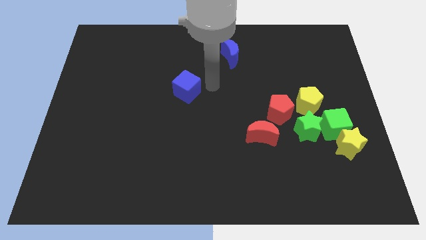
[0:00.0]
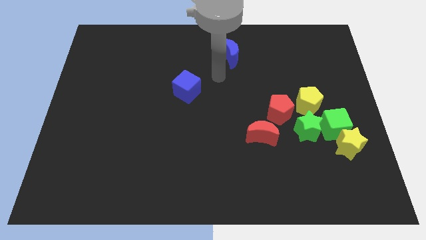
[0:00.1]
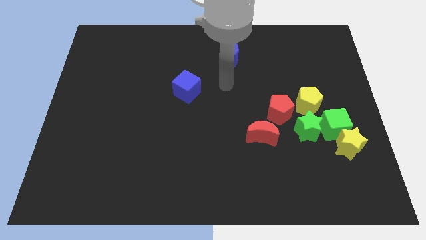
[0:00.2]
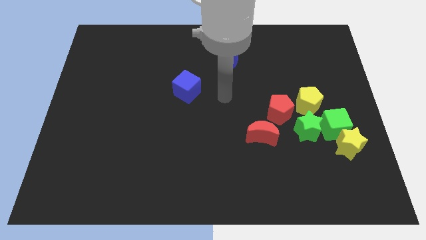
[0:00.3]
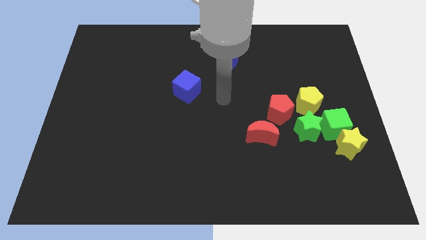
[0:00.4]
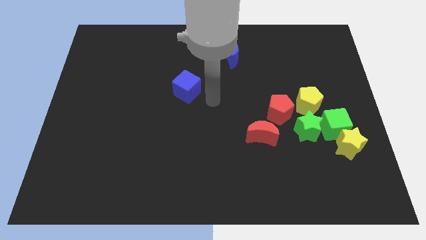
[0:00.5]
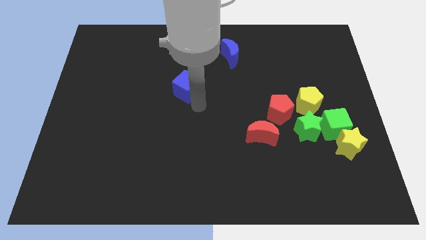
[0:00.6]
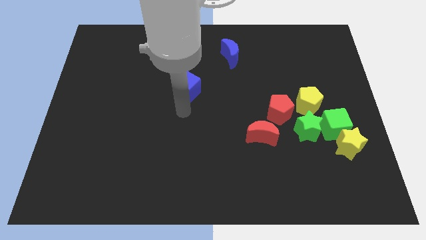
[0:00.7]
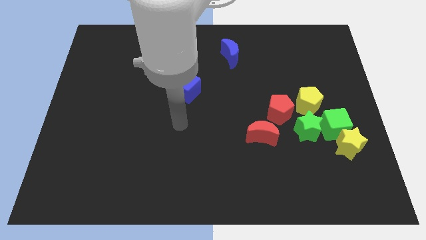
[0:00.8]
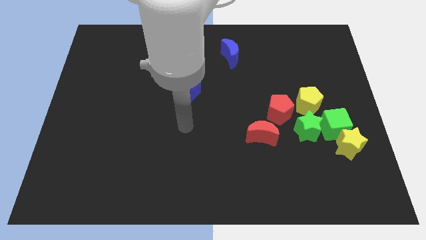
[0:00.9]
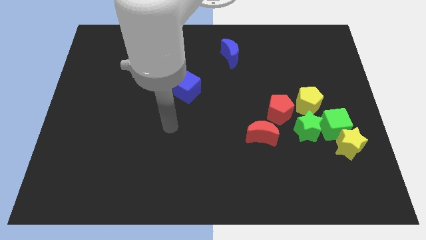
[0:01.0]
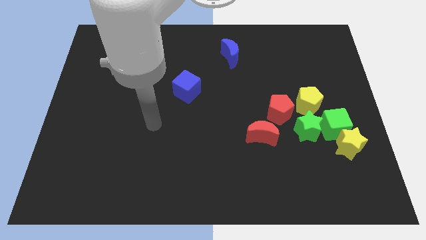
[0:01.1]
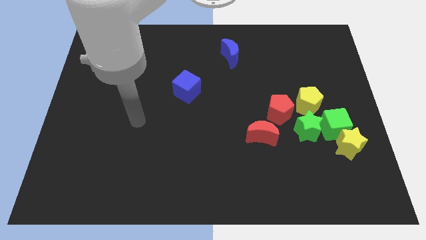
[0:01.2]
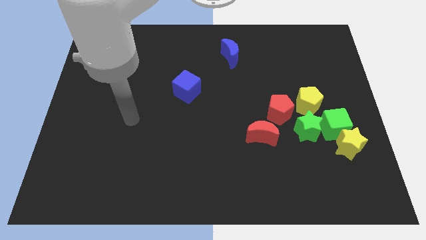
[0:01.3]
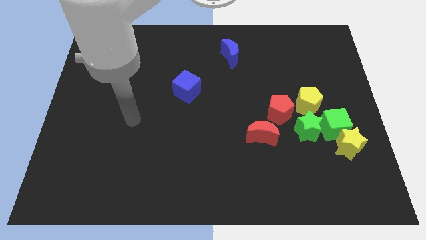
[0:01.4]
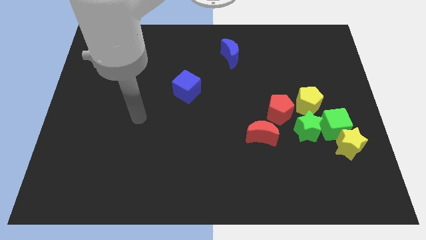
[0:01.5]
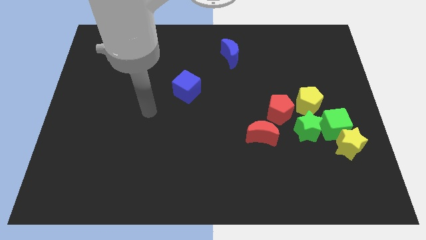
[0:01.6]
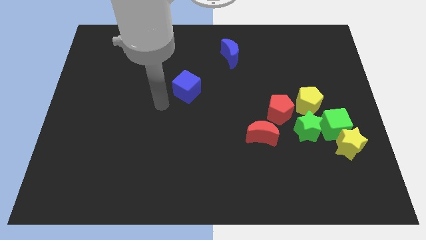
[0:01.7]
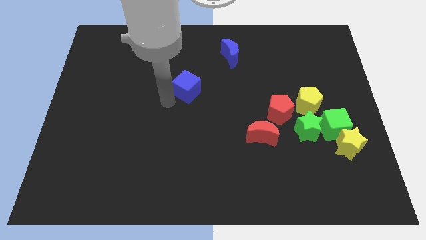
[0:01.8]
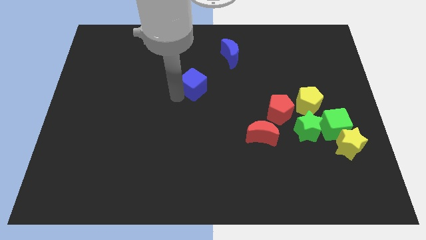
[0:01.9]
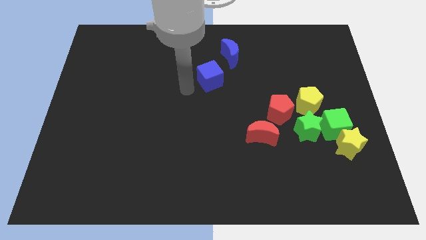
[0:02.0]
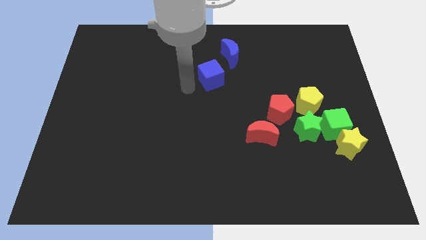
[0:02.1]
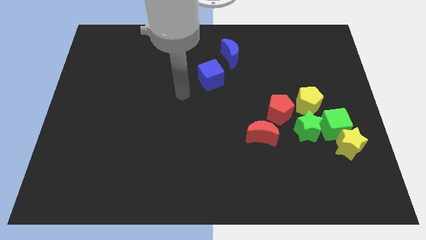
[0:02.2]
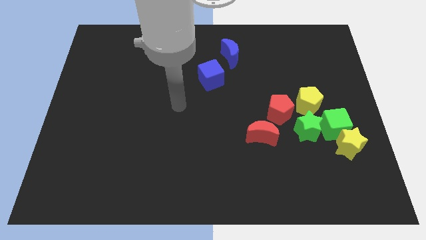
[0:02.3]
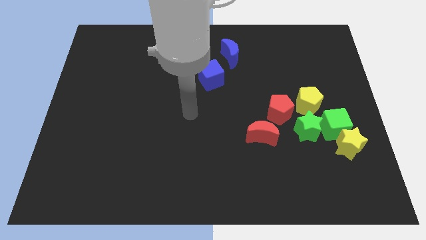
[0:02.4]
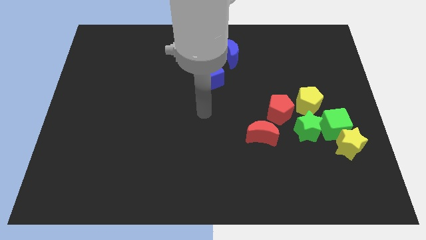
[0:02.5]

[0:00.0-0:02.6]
move the blue cube towards the blue crescent

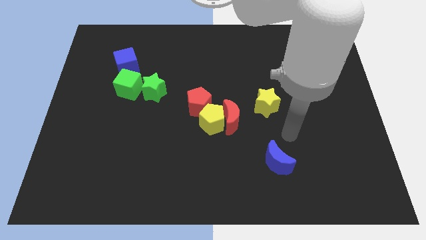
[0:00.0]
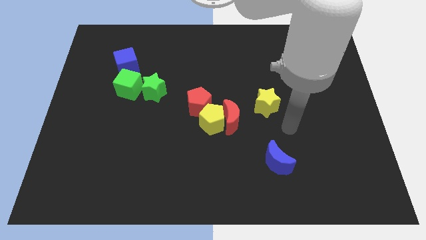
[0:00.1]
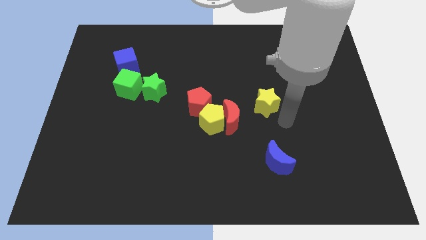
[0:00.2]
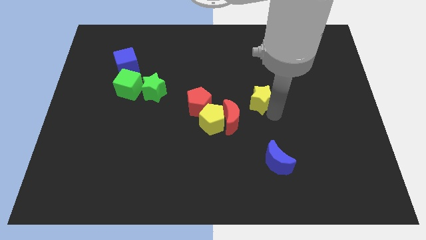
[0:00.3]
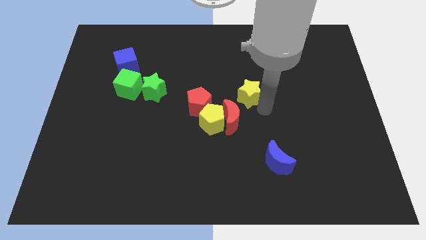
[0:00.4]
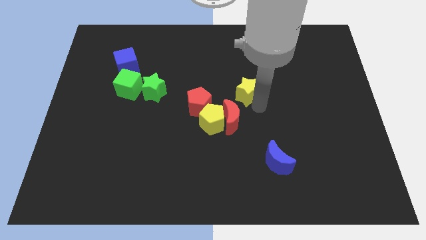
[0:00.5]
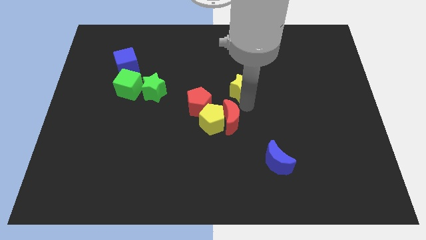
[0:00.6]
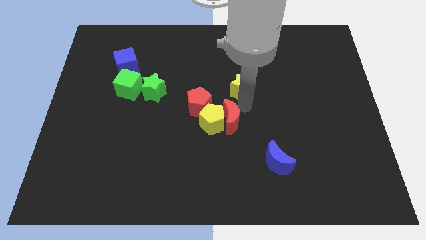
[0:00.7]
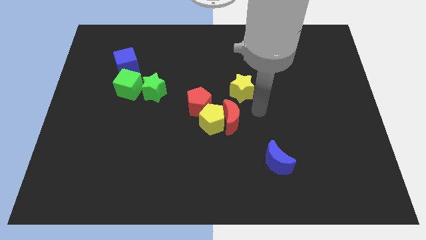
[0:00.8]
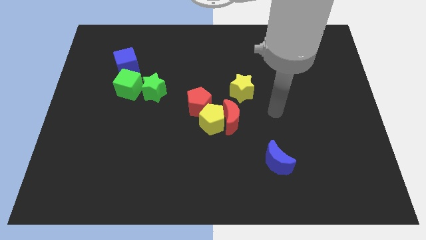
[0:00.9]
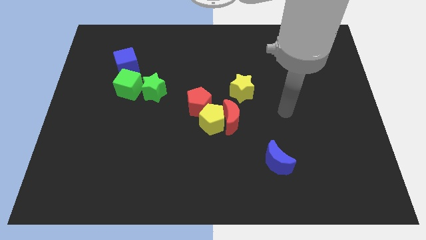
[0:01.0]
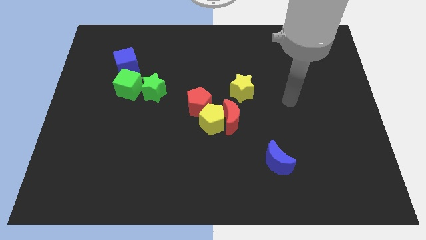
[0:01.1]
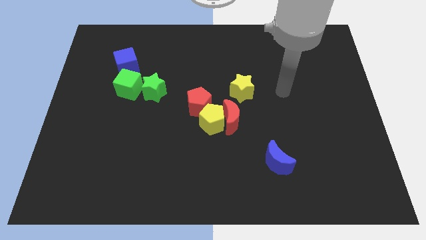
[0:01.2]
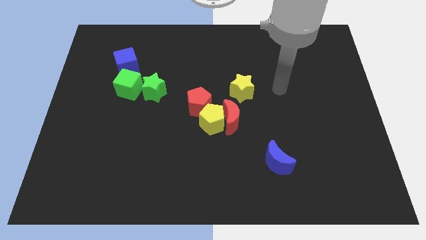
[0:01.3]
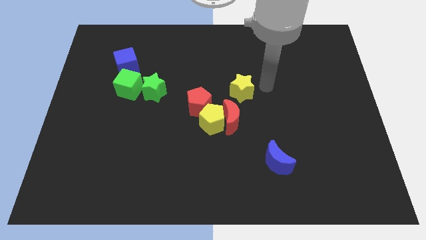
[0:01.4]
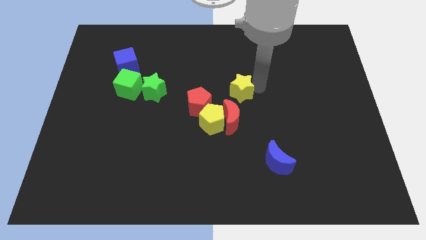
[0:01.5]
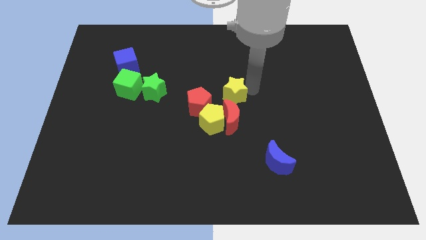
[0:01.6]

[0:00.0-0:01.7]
place the yellow star above the red moon

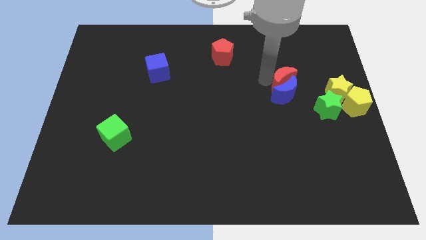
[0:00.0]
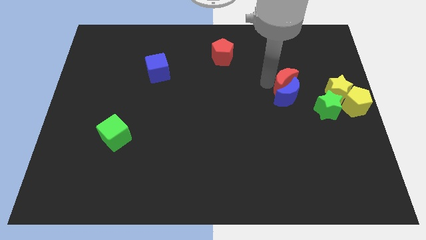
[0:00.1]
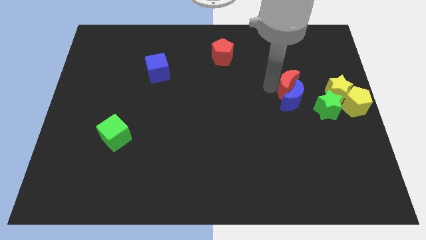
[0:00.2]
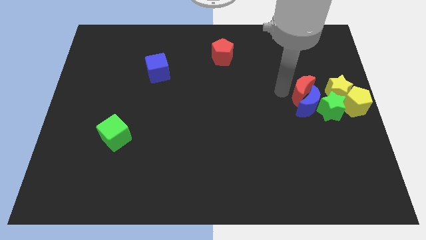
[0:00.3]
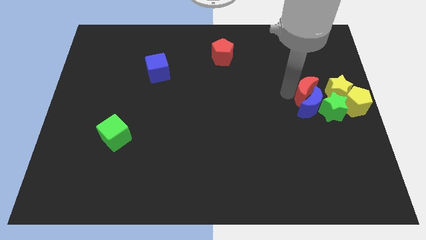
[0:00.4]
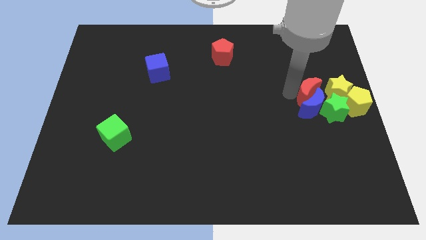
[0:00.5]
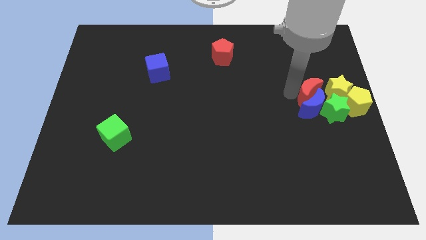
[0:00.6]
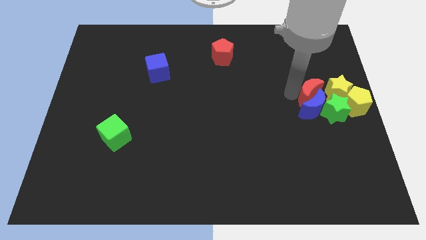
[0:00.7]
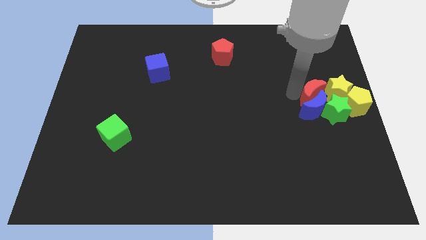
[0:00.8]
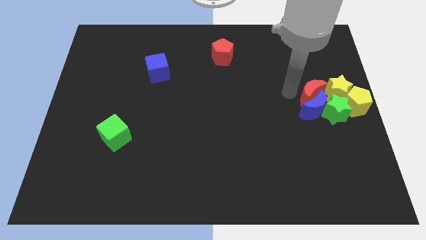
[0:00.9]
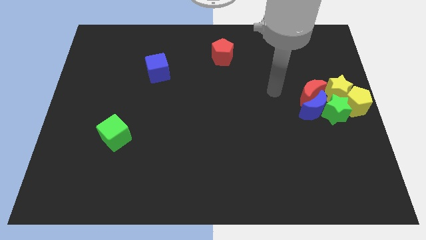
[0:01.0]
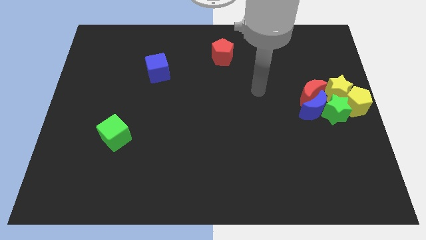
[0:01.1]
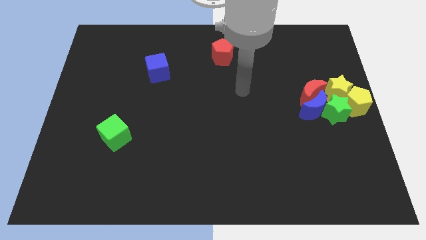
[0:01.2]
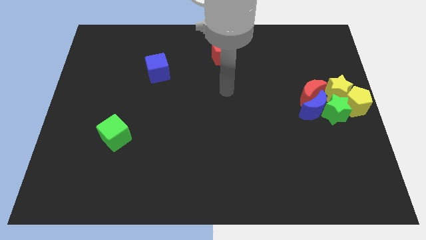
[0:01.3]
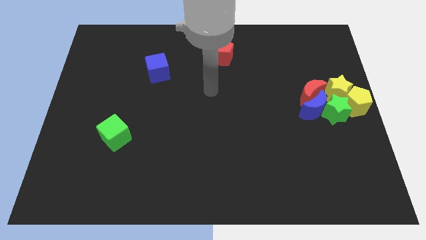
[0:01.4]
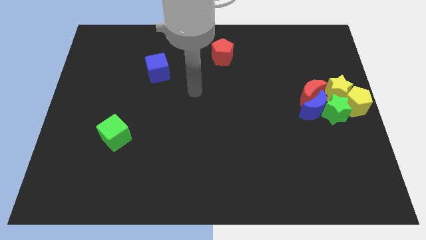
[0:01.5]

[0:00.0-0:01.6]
move the red moon and blue moon into the green star

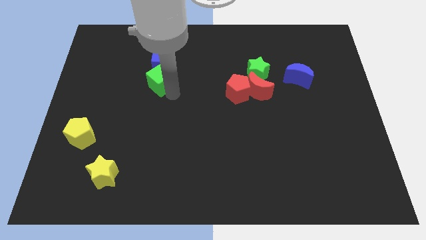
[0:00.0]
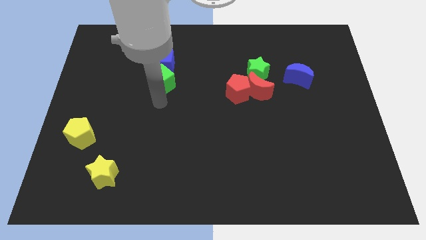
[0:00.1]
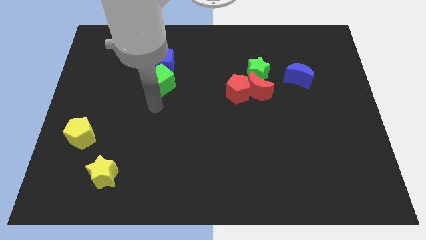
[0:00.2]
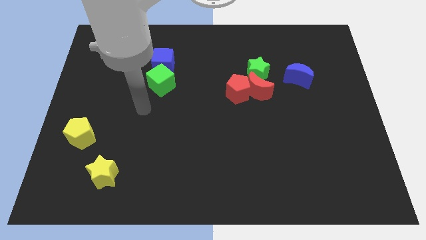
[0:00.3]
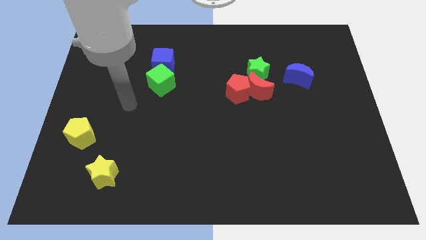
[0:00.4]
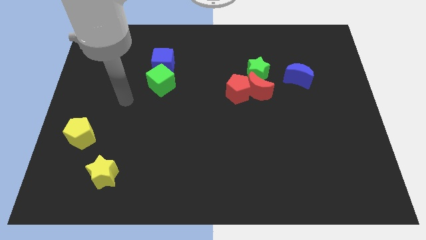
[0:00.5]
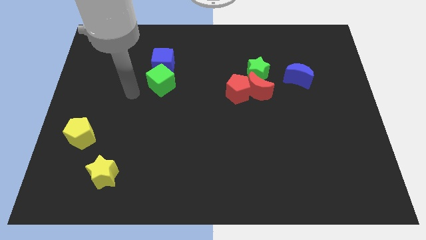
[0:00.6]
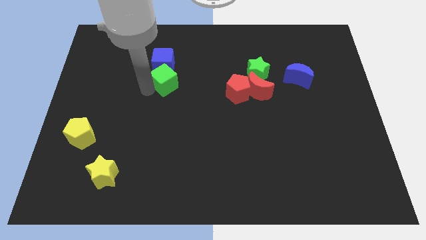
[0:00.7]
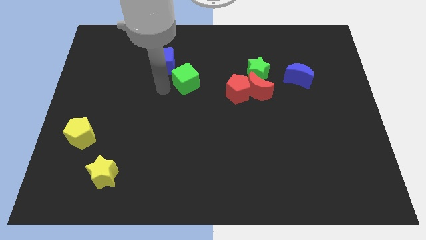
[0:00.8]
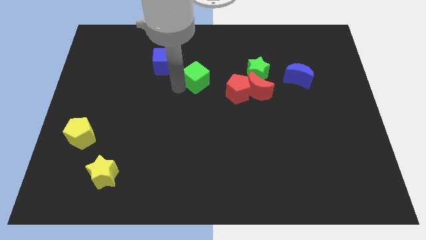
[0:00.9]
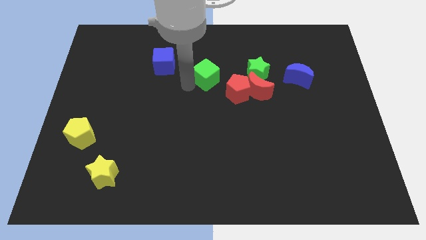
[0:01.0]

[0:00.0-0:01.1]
separate green cube from blue cube

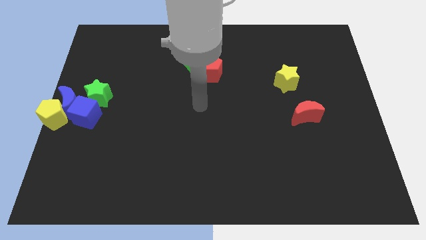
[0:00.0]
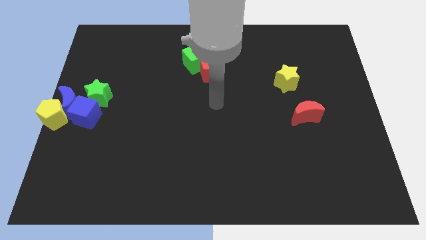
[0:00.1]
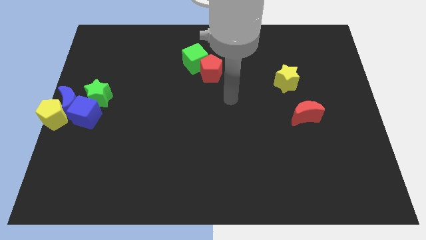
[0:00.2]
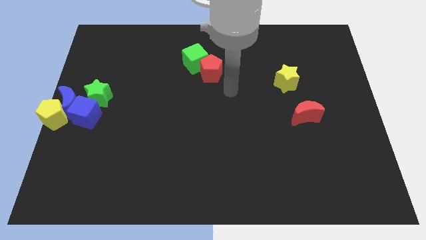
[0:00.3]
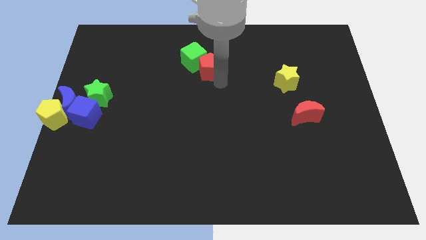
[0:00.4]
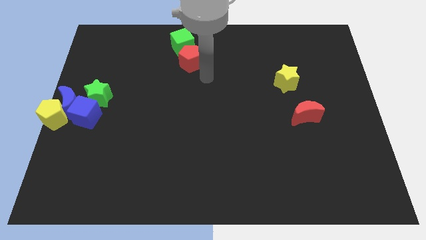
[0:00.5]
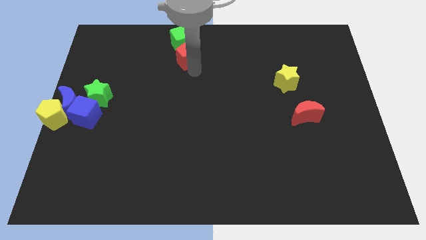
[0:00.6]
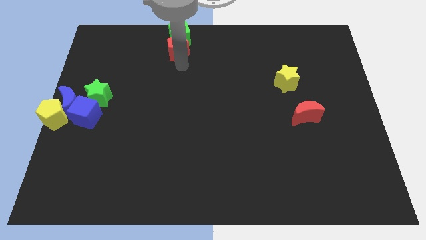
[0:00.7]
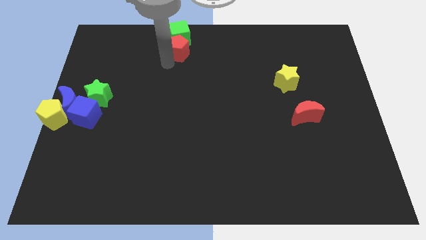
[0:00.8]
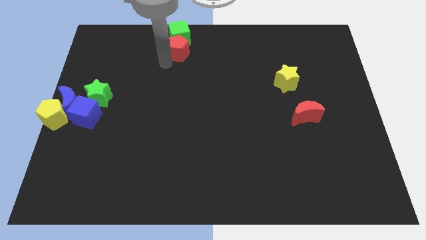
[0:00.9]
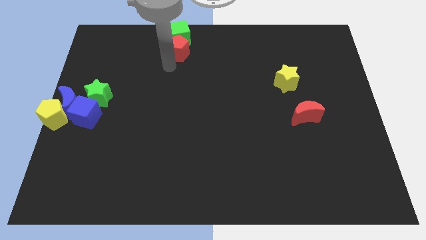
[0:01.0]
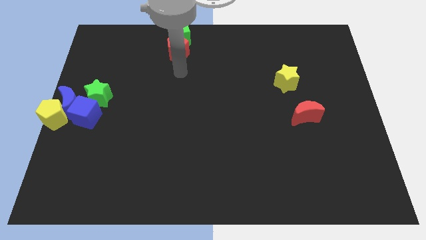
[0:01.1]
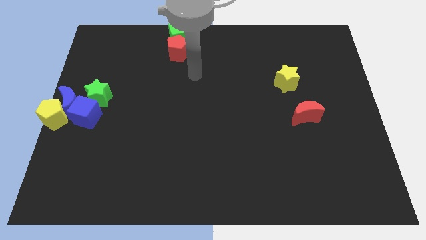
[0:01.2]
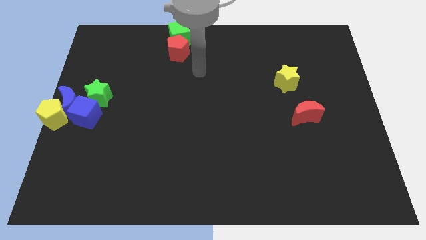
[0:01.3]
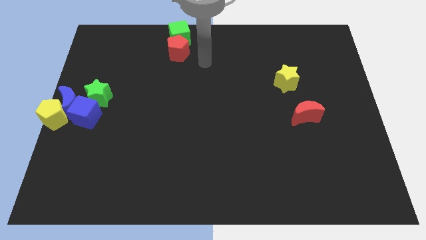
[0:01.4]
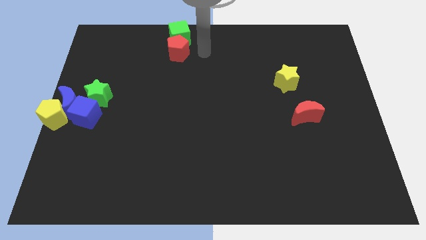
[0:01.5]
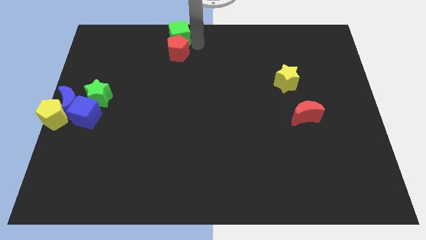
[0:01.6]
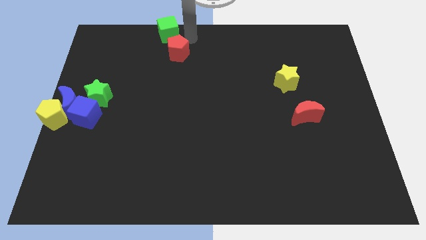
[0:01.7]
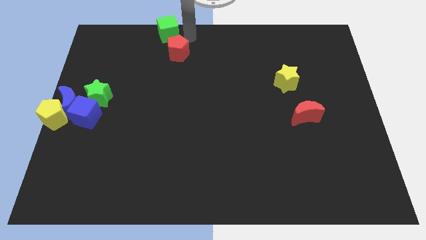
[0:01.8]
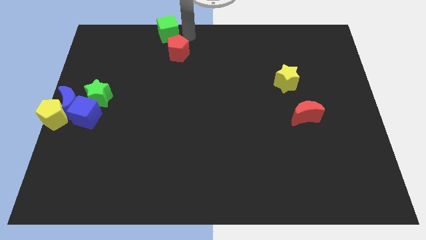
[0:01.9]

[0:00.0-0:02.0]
move the green cube and red pentagon to top of the board

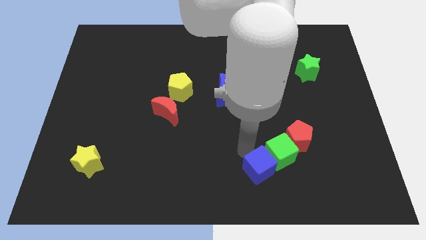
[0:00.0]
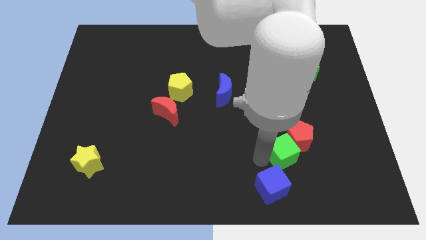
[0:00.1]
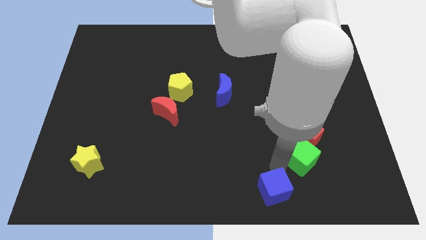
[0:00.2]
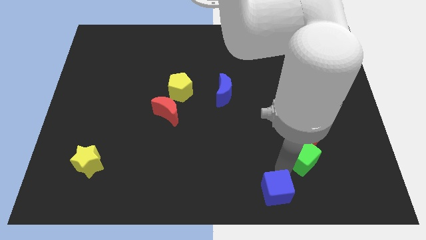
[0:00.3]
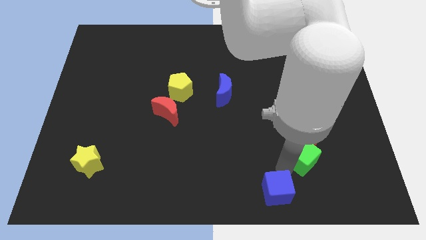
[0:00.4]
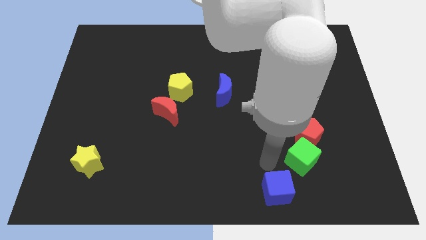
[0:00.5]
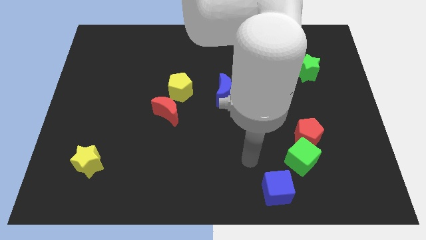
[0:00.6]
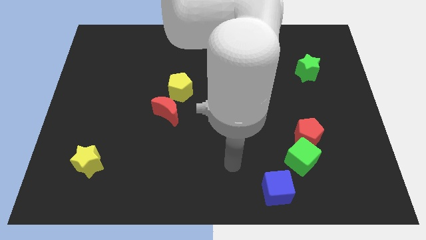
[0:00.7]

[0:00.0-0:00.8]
separate green cube and blue cube
